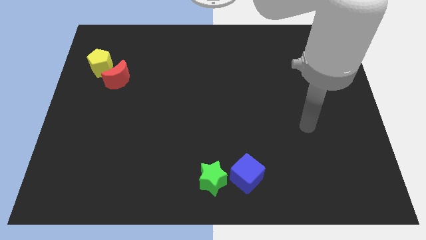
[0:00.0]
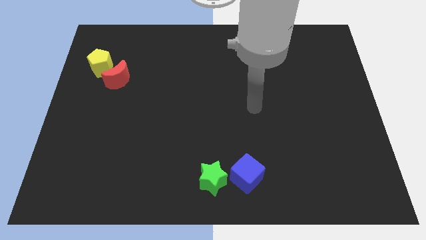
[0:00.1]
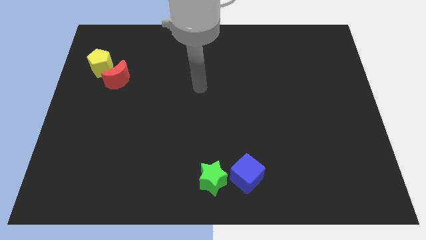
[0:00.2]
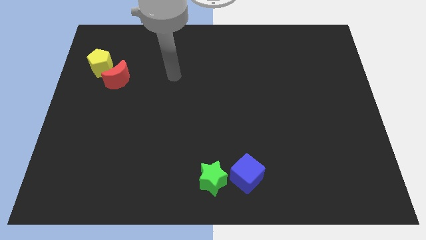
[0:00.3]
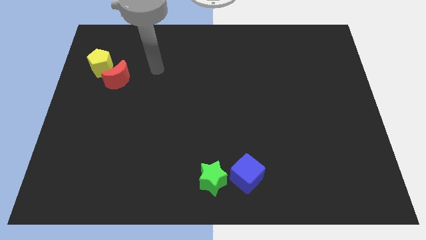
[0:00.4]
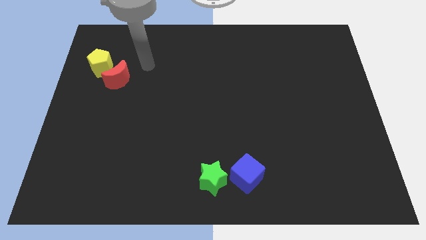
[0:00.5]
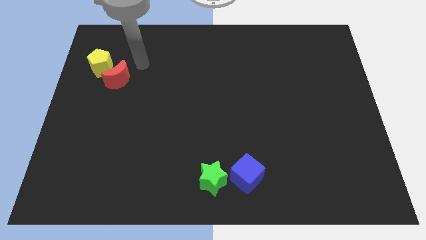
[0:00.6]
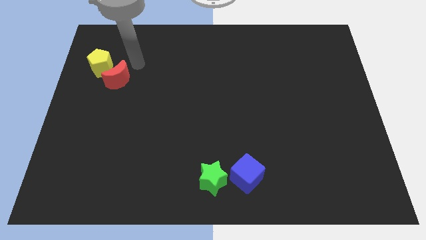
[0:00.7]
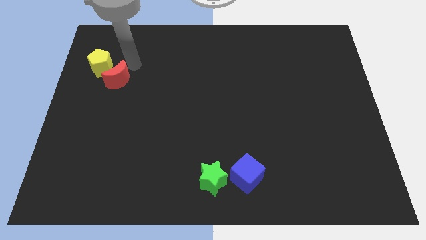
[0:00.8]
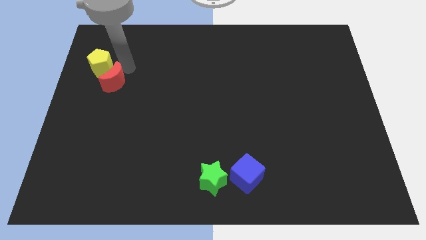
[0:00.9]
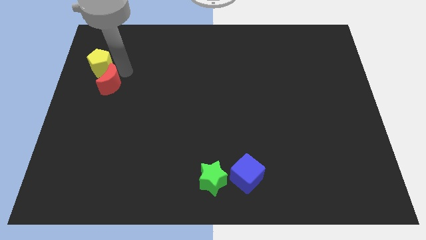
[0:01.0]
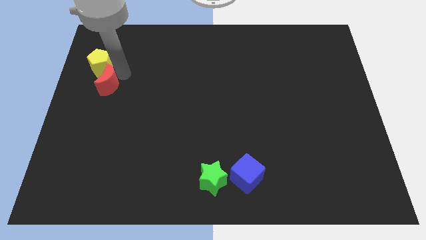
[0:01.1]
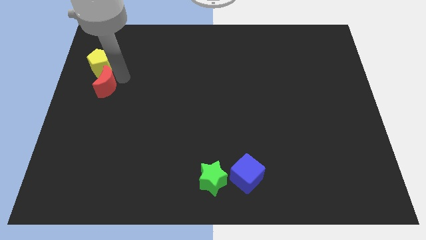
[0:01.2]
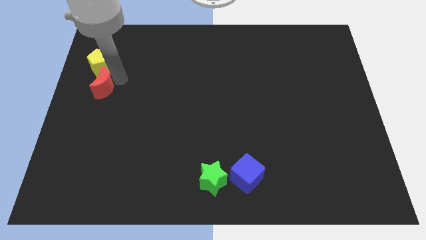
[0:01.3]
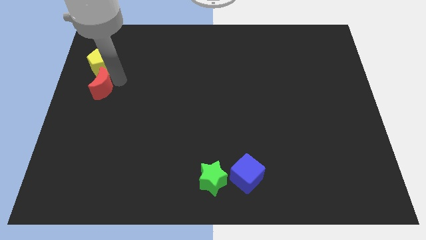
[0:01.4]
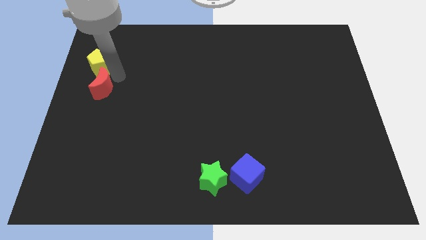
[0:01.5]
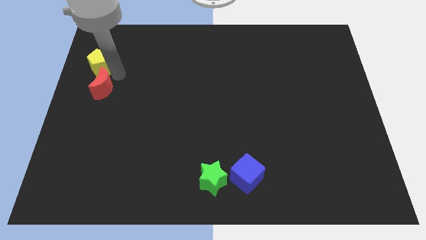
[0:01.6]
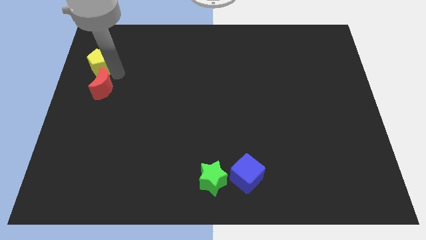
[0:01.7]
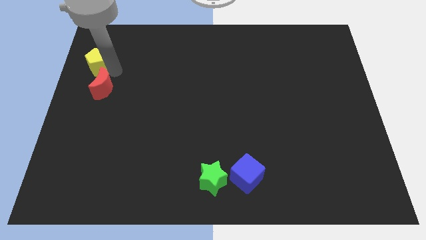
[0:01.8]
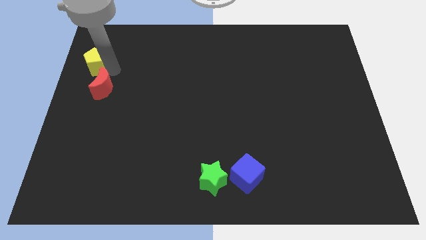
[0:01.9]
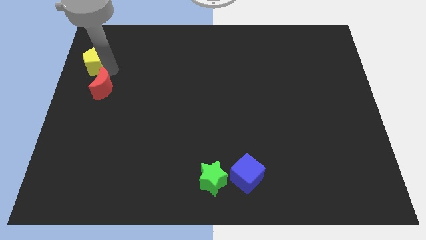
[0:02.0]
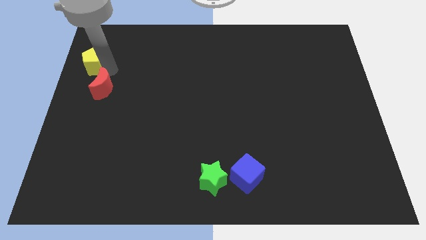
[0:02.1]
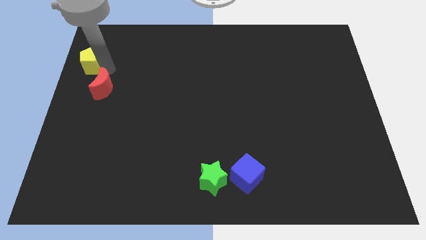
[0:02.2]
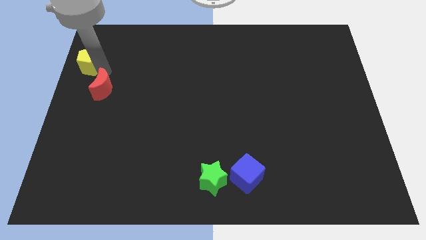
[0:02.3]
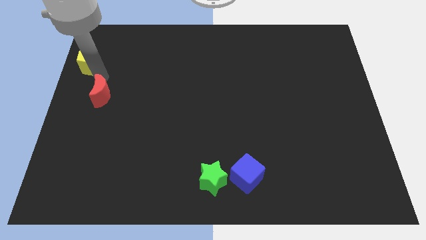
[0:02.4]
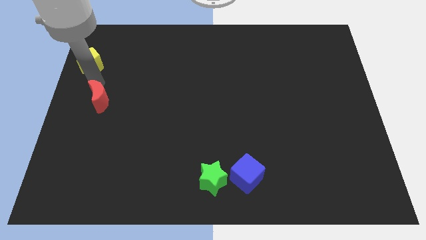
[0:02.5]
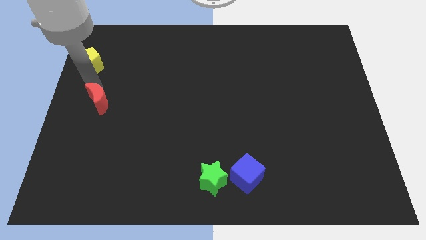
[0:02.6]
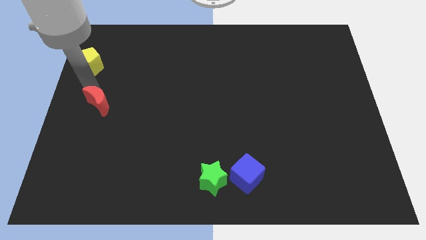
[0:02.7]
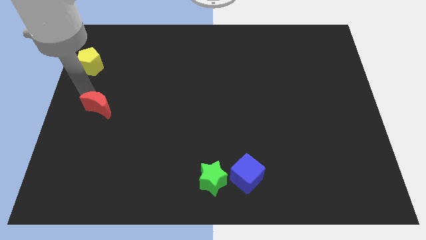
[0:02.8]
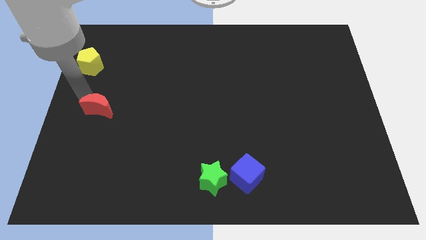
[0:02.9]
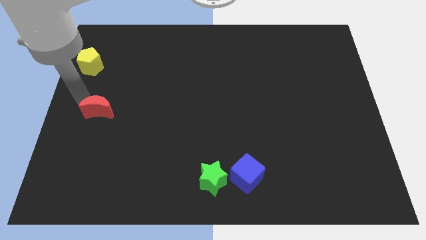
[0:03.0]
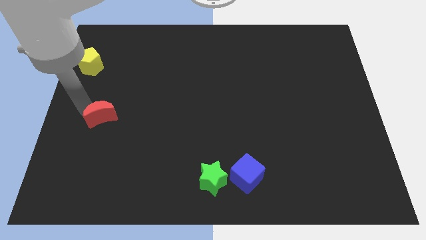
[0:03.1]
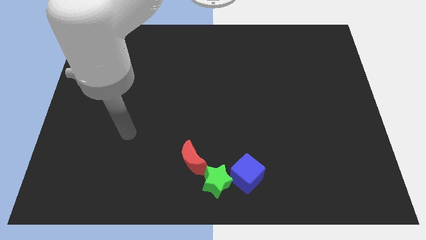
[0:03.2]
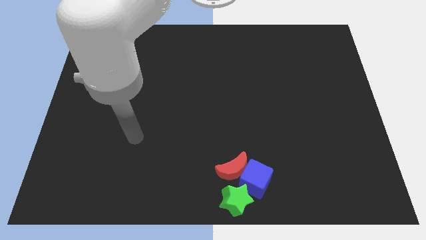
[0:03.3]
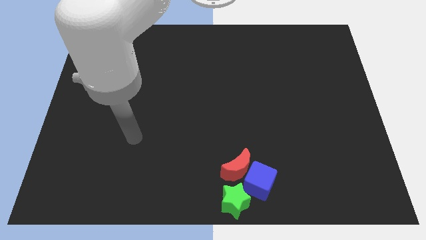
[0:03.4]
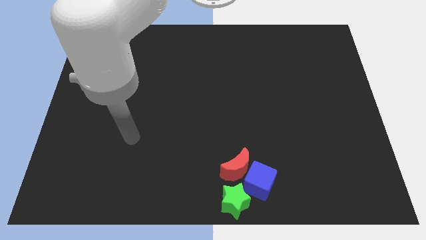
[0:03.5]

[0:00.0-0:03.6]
move the red block to the blue cube

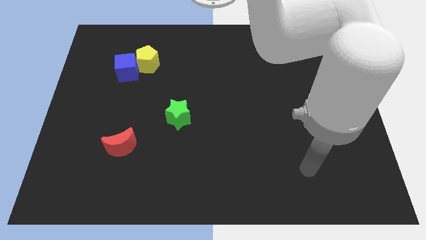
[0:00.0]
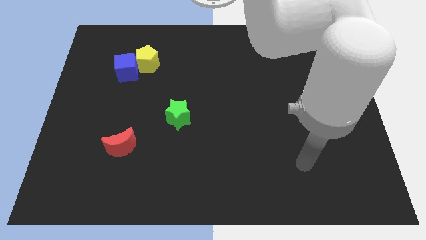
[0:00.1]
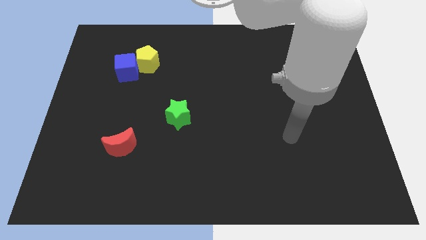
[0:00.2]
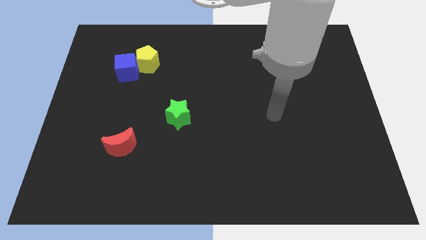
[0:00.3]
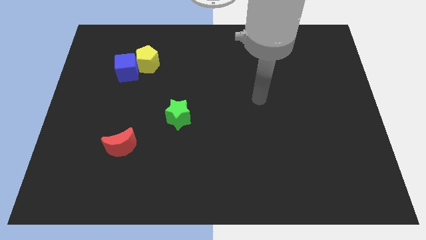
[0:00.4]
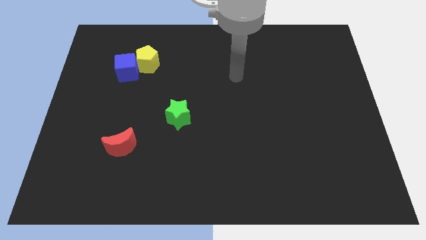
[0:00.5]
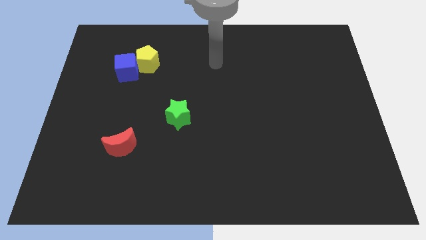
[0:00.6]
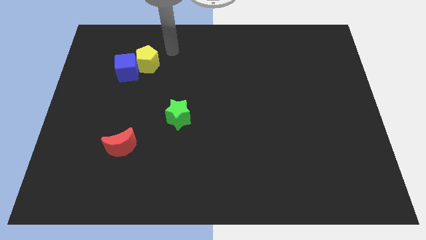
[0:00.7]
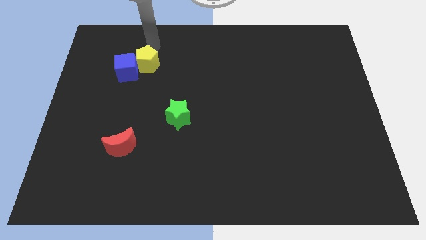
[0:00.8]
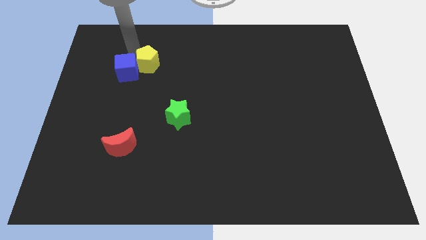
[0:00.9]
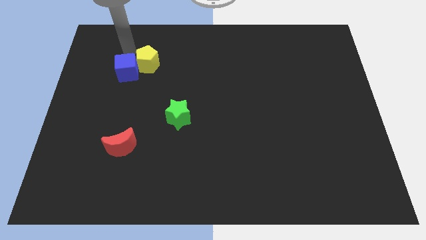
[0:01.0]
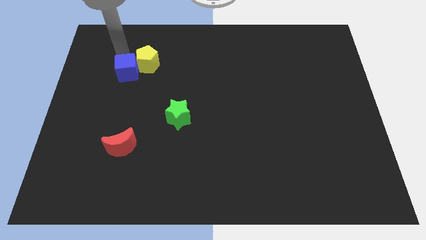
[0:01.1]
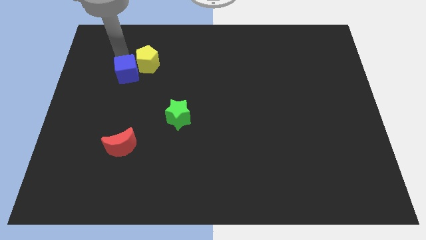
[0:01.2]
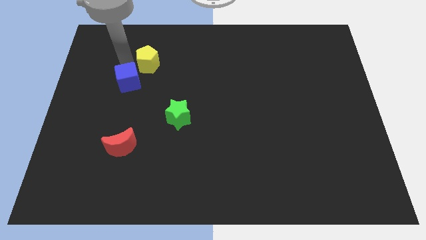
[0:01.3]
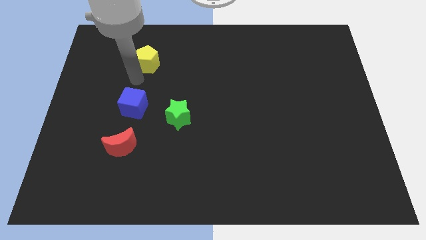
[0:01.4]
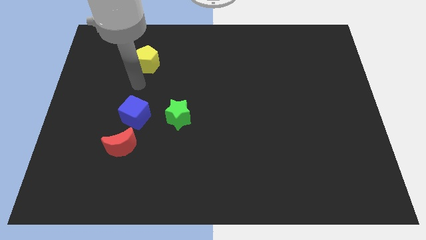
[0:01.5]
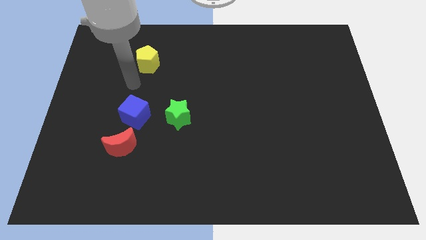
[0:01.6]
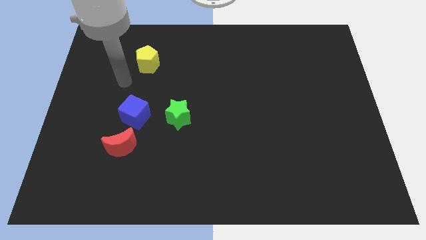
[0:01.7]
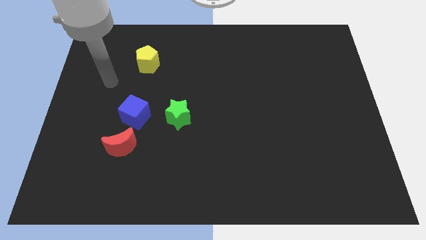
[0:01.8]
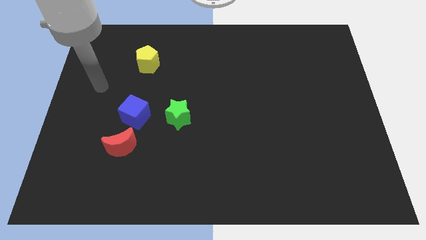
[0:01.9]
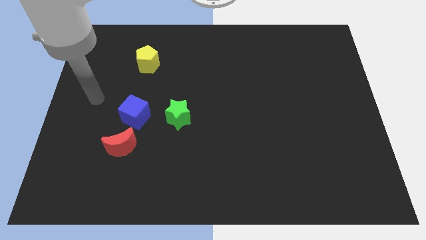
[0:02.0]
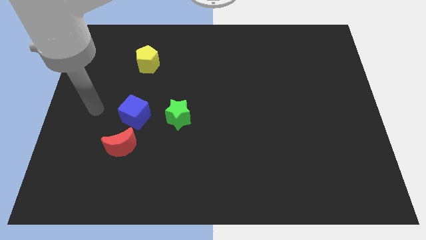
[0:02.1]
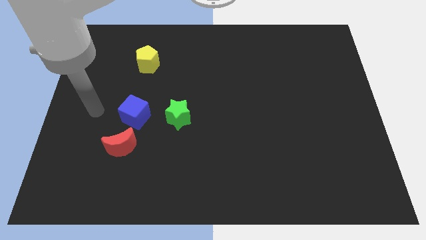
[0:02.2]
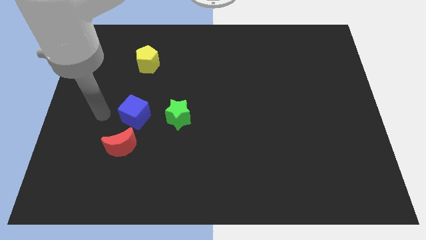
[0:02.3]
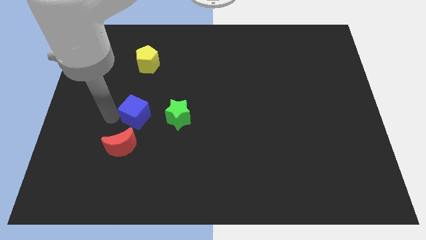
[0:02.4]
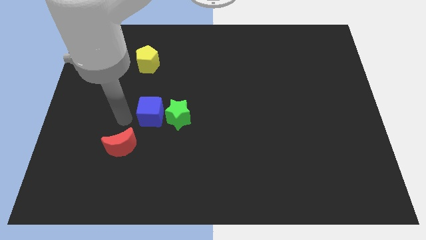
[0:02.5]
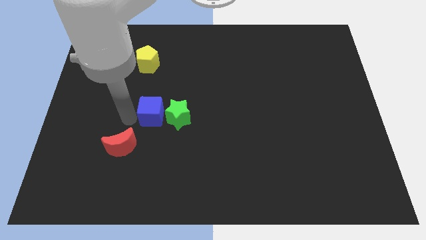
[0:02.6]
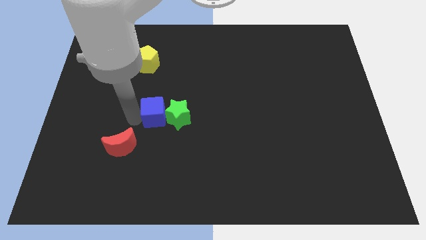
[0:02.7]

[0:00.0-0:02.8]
slide the blue cube to the green block

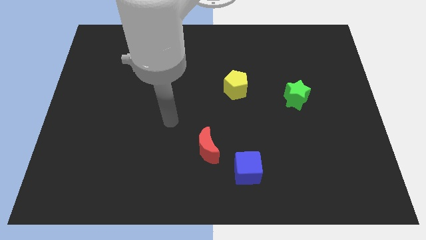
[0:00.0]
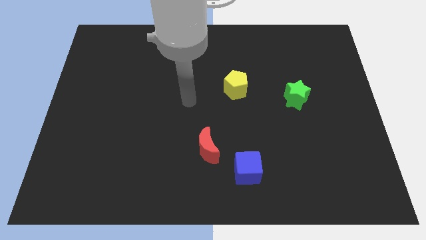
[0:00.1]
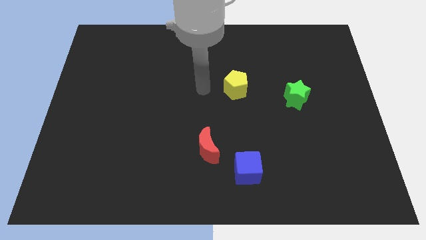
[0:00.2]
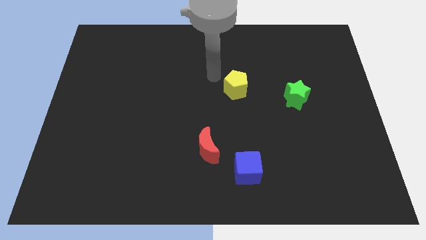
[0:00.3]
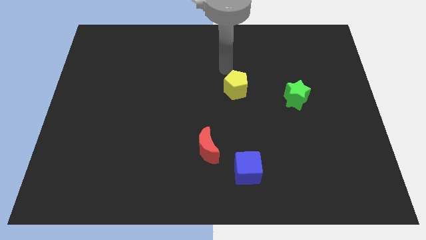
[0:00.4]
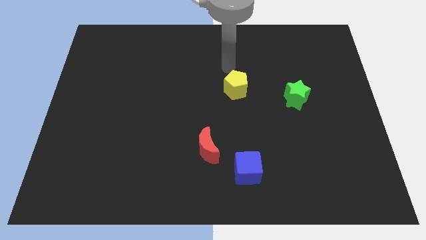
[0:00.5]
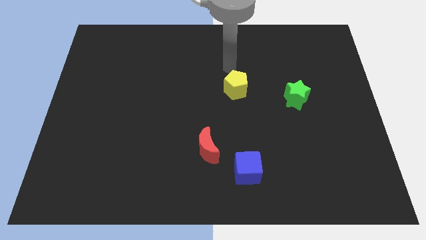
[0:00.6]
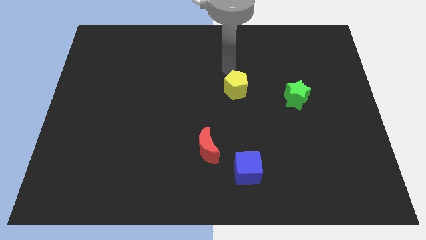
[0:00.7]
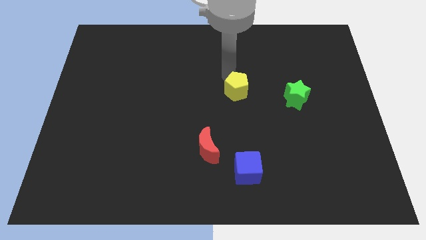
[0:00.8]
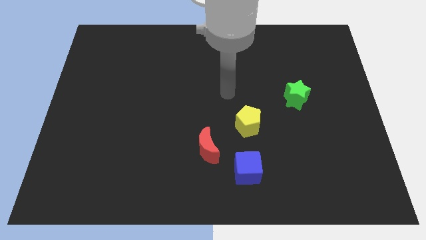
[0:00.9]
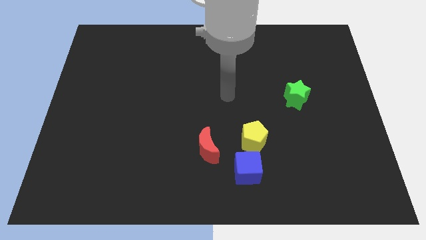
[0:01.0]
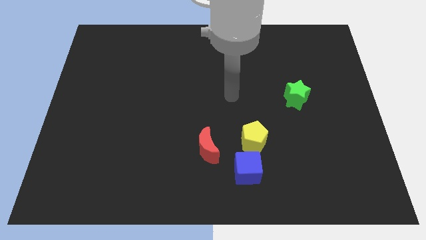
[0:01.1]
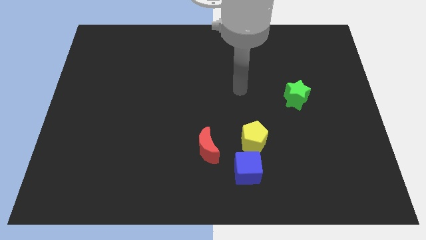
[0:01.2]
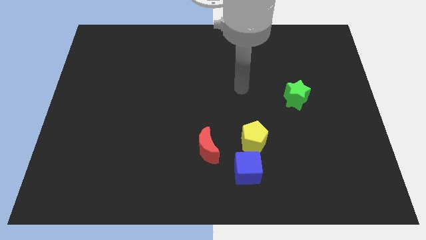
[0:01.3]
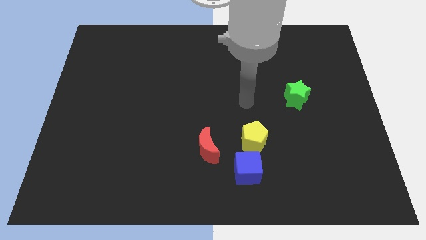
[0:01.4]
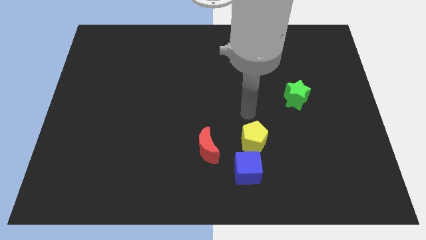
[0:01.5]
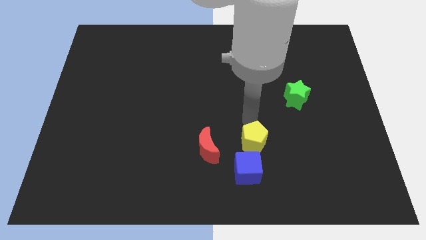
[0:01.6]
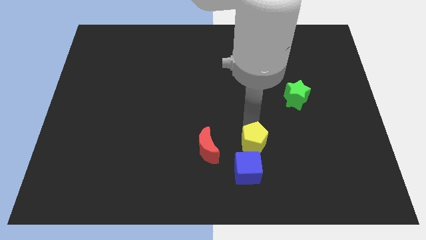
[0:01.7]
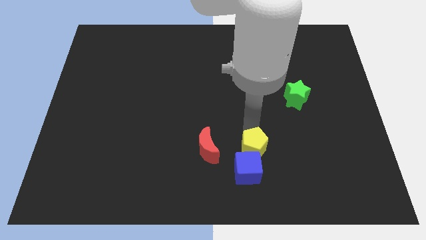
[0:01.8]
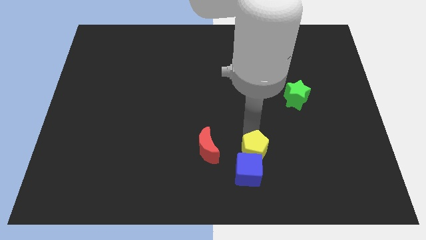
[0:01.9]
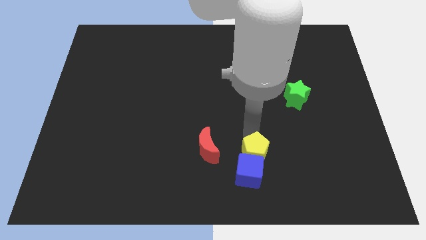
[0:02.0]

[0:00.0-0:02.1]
move the yellow pentagon next to the cube
